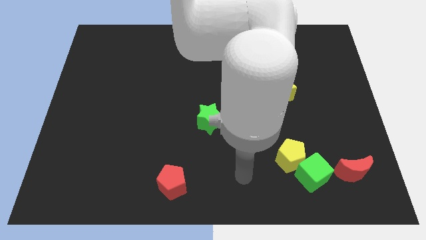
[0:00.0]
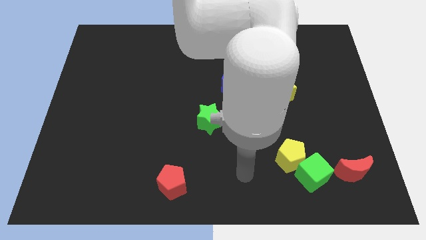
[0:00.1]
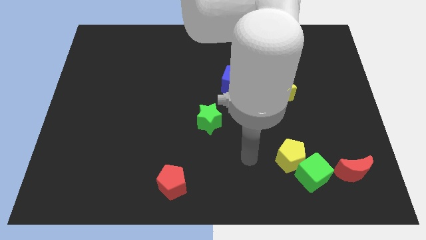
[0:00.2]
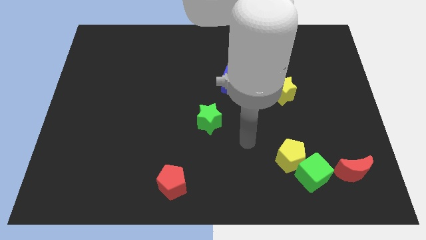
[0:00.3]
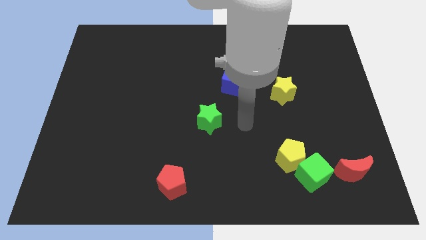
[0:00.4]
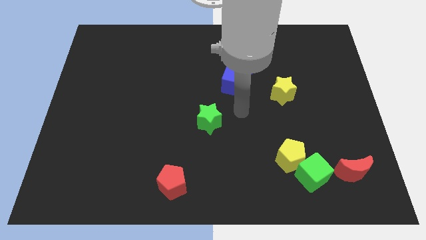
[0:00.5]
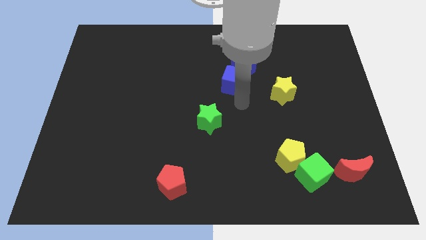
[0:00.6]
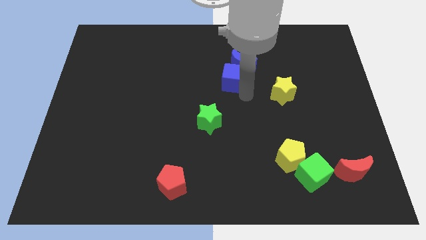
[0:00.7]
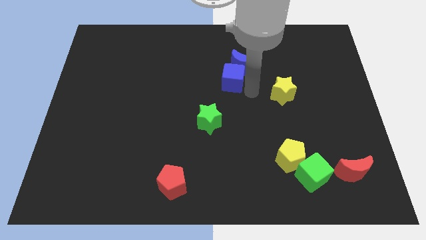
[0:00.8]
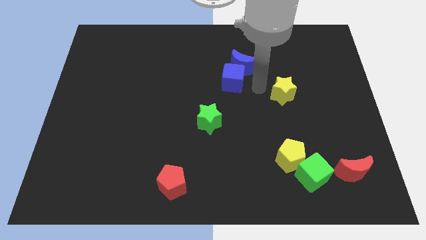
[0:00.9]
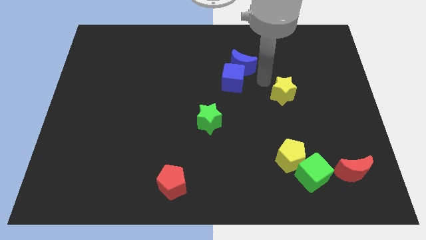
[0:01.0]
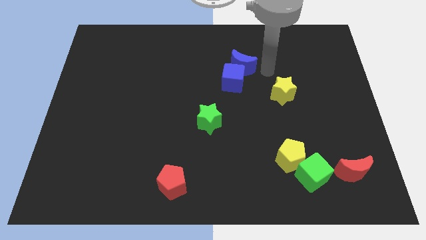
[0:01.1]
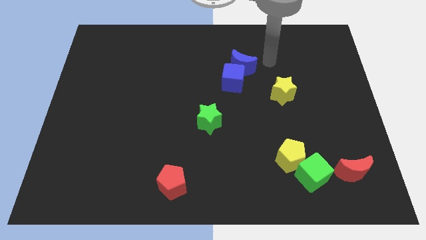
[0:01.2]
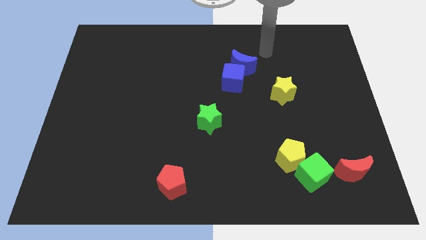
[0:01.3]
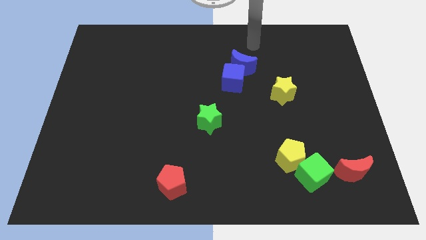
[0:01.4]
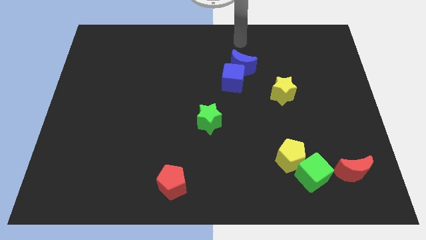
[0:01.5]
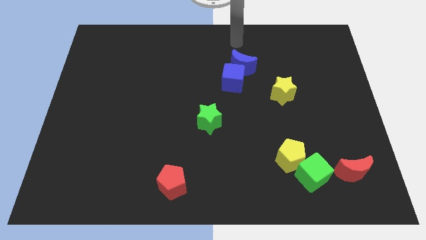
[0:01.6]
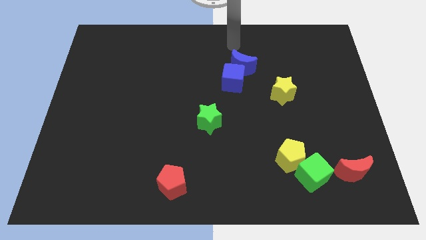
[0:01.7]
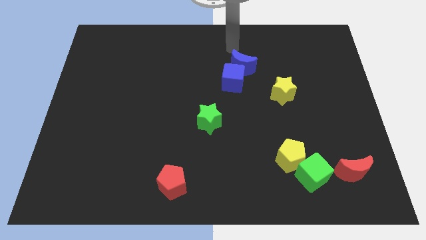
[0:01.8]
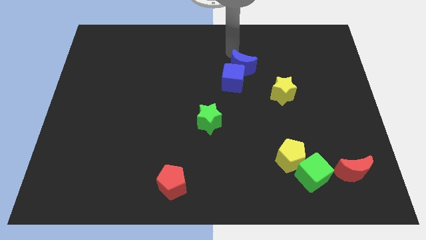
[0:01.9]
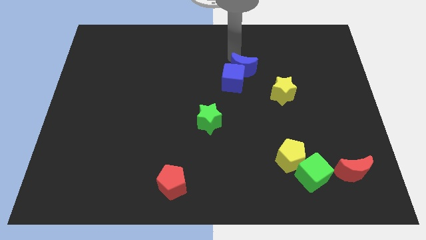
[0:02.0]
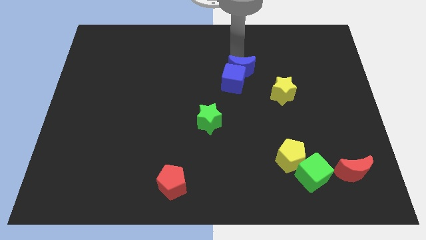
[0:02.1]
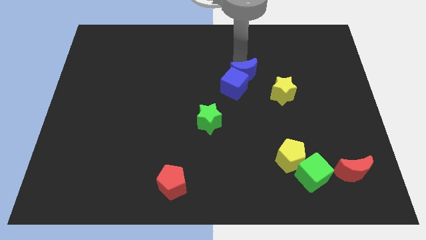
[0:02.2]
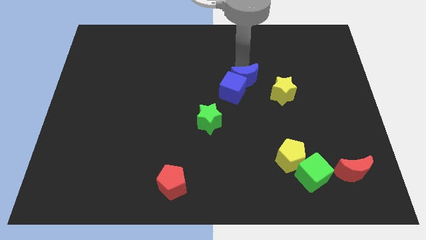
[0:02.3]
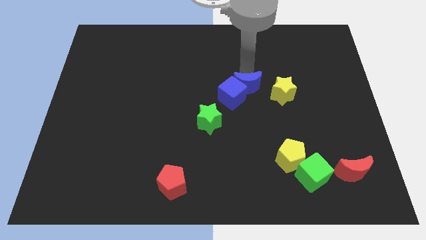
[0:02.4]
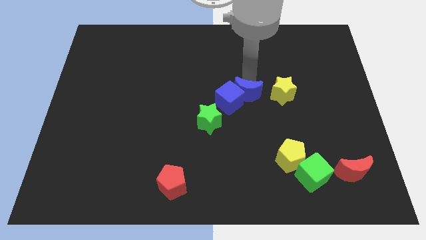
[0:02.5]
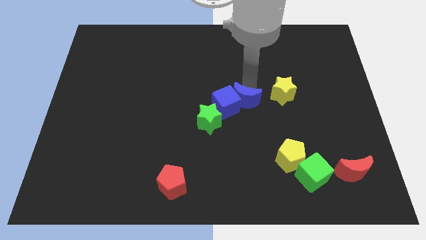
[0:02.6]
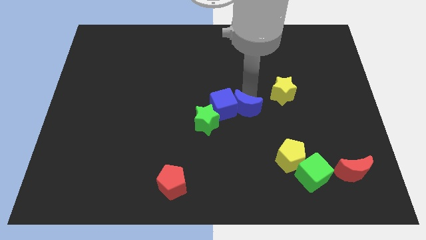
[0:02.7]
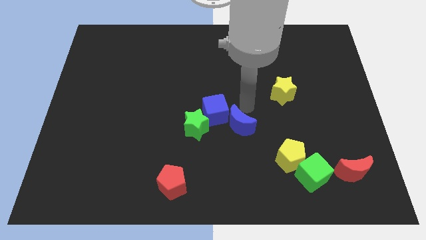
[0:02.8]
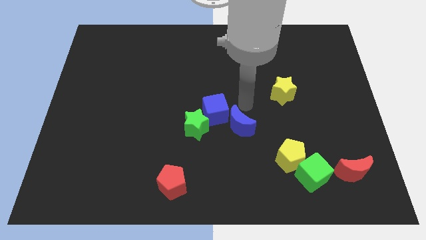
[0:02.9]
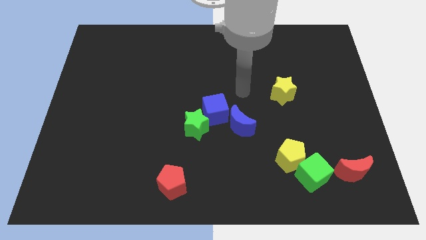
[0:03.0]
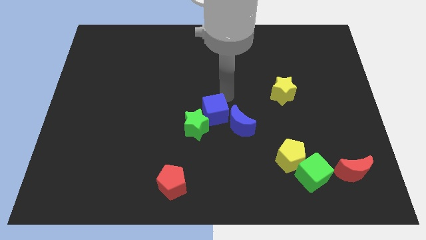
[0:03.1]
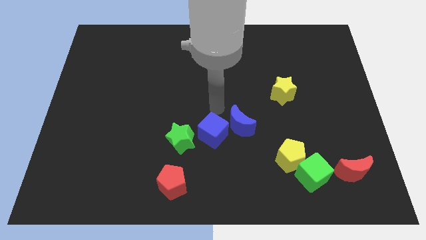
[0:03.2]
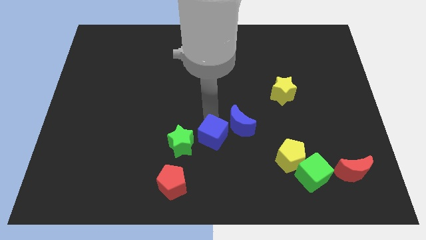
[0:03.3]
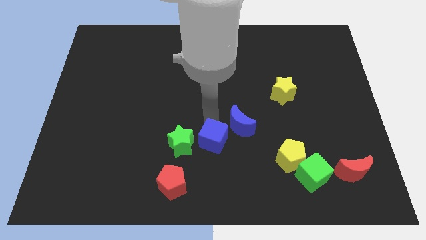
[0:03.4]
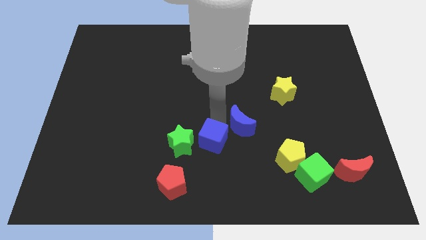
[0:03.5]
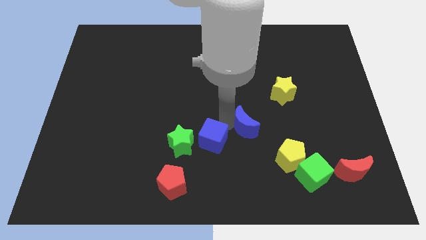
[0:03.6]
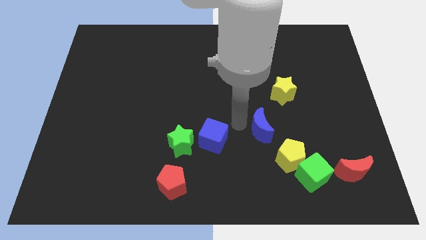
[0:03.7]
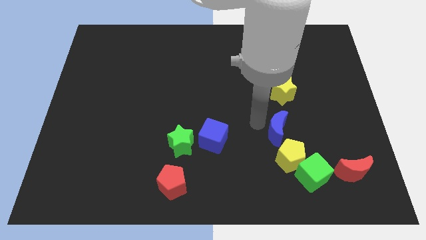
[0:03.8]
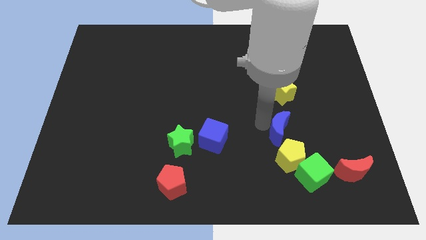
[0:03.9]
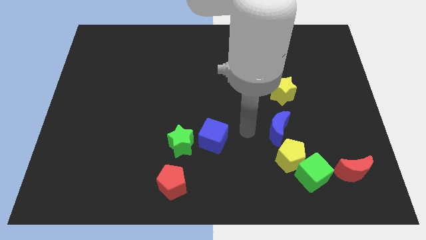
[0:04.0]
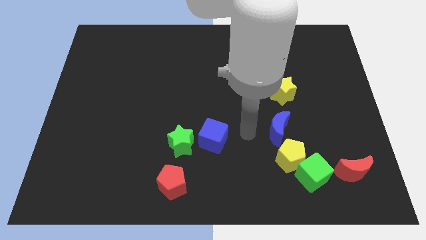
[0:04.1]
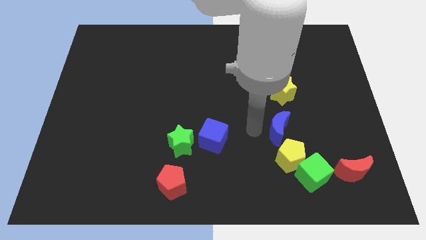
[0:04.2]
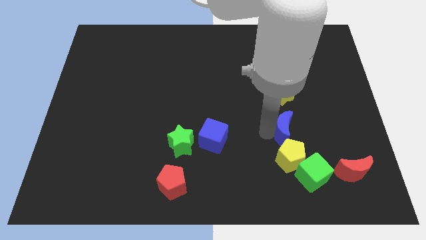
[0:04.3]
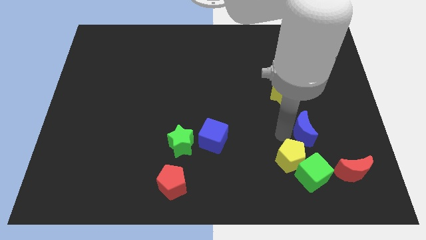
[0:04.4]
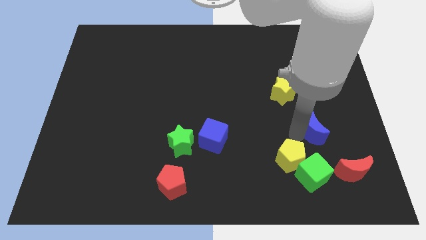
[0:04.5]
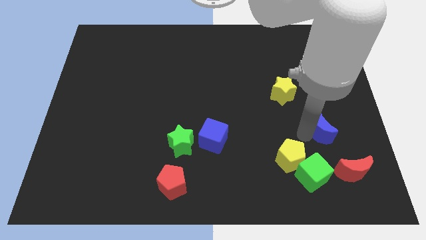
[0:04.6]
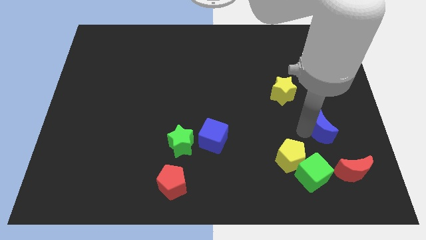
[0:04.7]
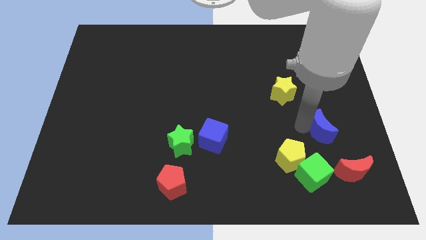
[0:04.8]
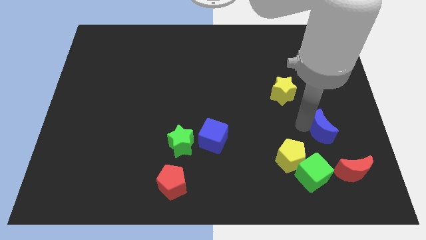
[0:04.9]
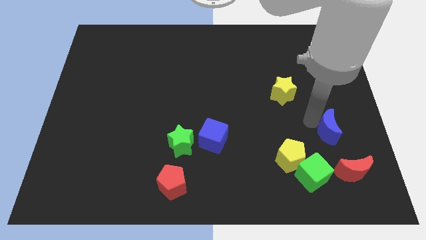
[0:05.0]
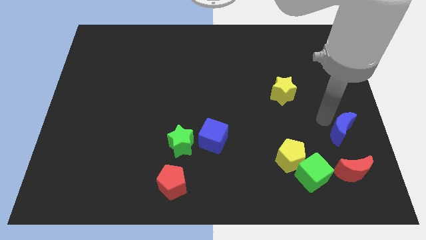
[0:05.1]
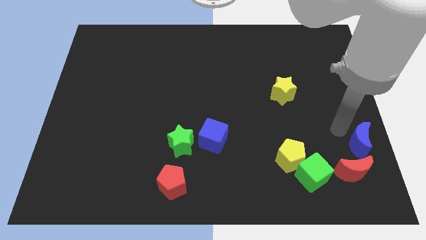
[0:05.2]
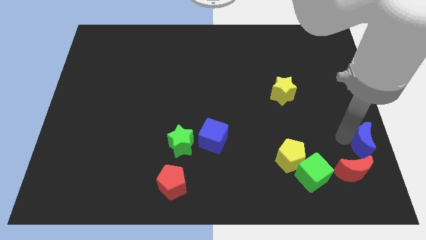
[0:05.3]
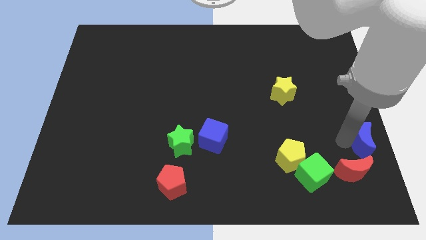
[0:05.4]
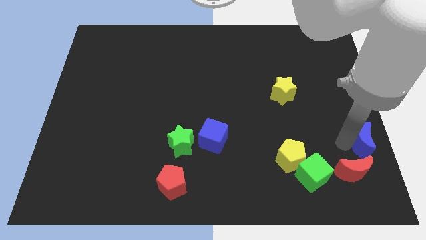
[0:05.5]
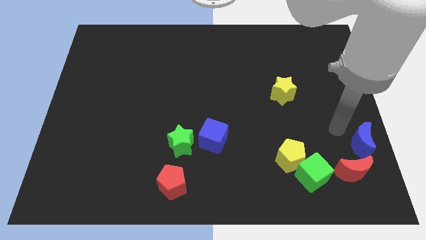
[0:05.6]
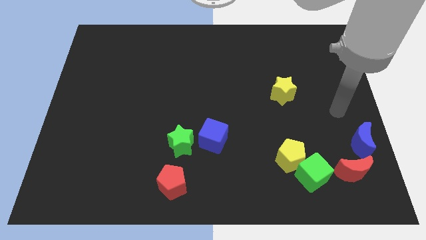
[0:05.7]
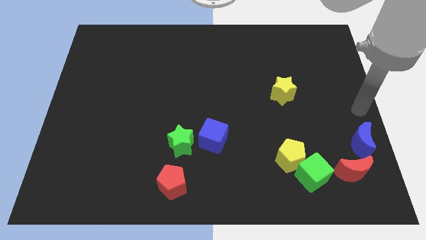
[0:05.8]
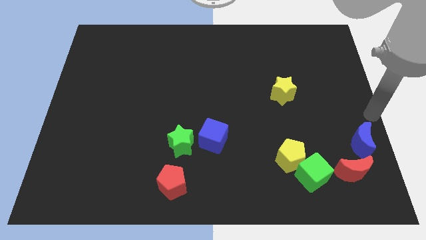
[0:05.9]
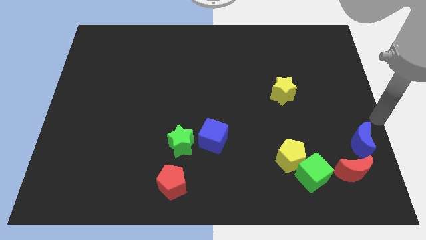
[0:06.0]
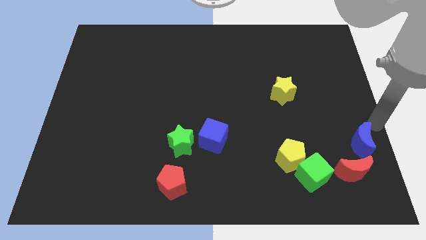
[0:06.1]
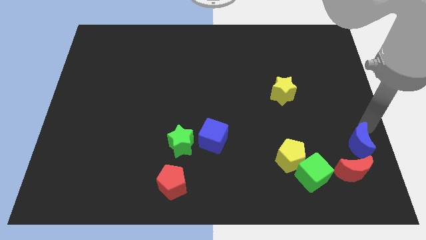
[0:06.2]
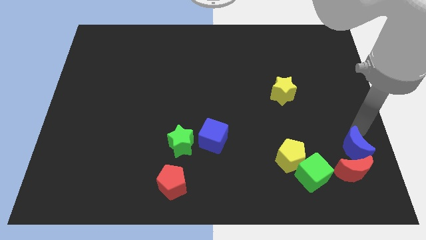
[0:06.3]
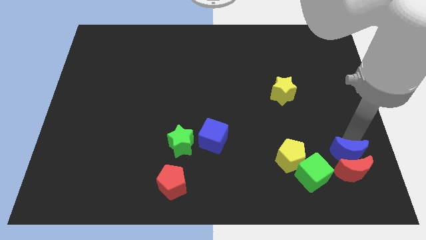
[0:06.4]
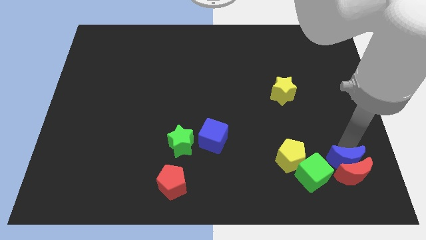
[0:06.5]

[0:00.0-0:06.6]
move the blue moon close to the red moon

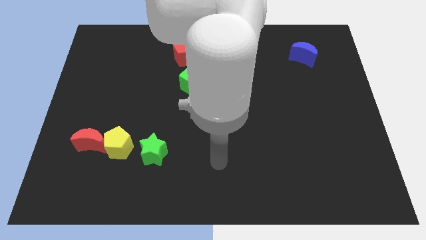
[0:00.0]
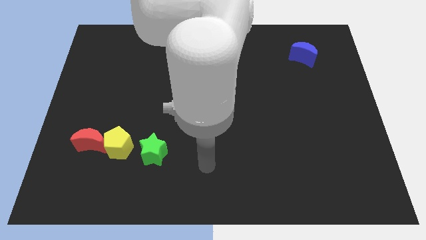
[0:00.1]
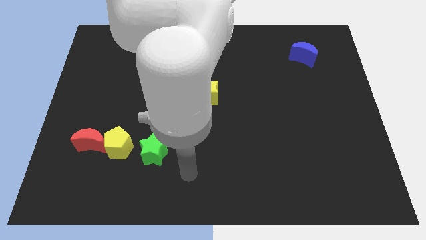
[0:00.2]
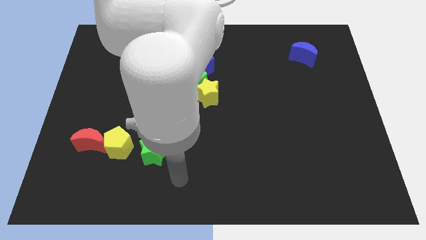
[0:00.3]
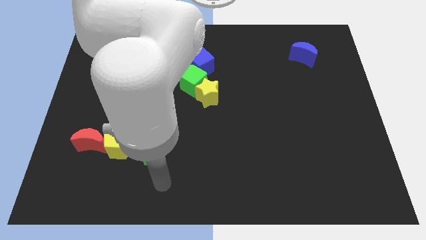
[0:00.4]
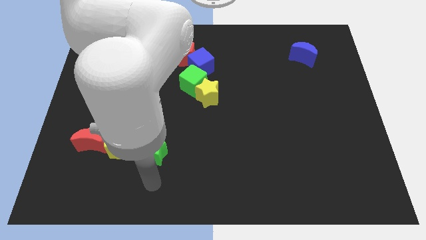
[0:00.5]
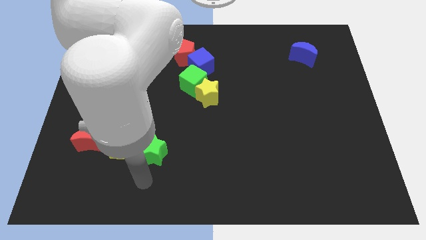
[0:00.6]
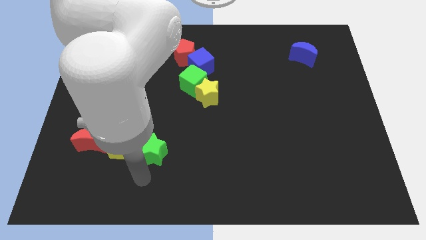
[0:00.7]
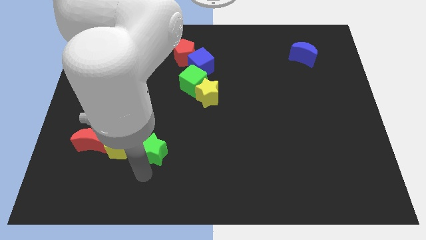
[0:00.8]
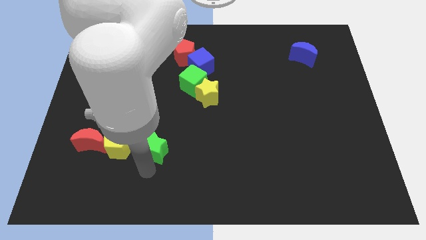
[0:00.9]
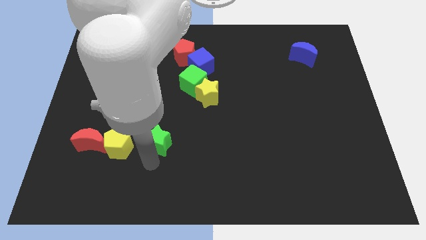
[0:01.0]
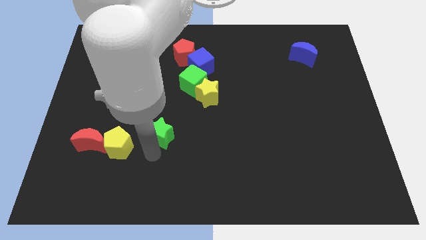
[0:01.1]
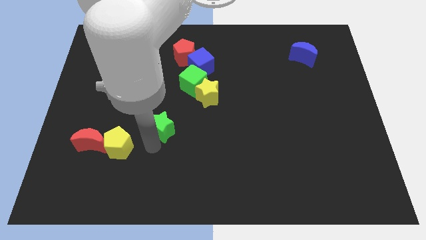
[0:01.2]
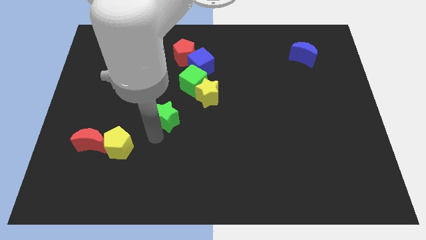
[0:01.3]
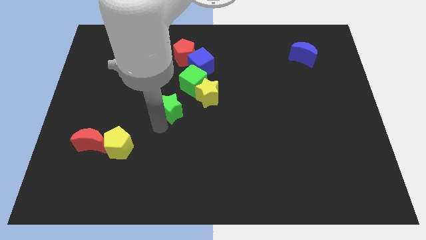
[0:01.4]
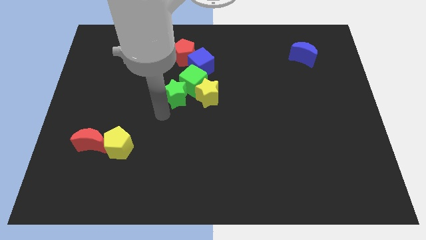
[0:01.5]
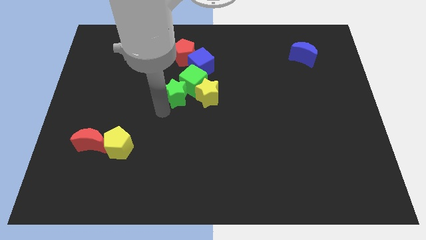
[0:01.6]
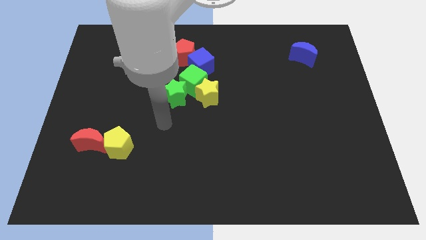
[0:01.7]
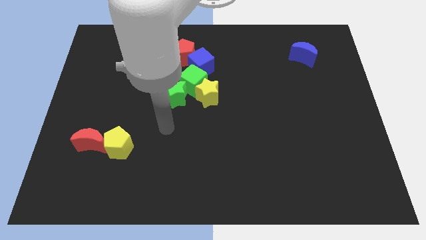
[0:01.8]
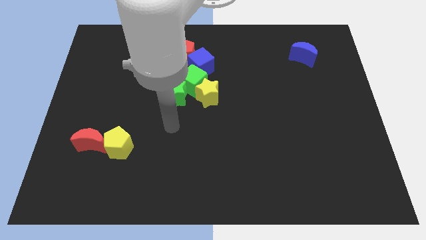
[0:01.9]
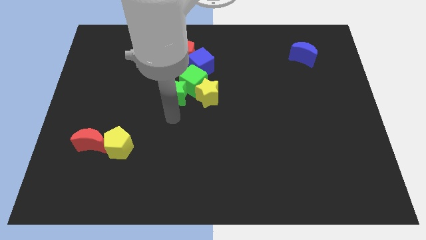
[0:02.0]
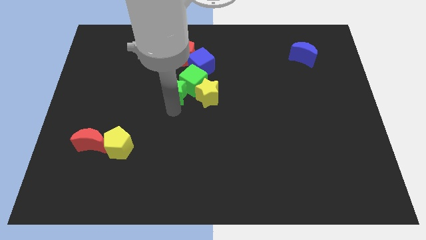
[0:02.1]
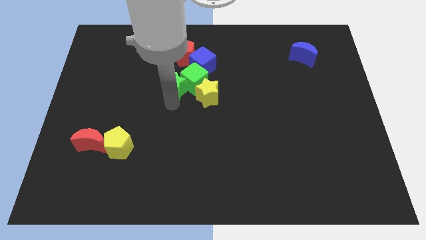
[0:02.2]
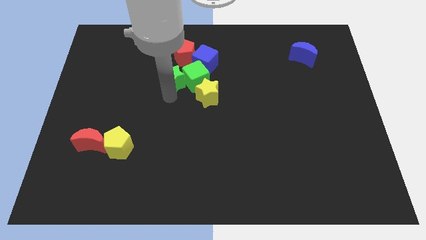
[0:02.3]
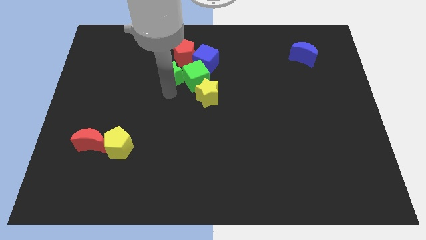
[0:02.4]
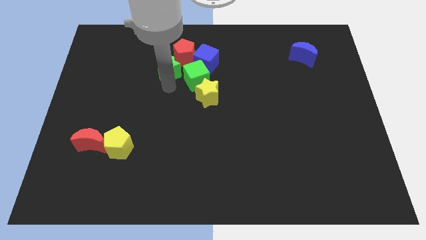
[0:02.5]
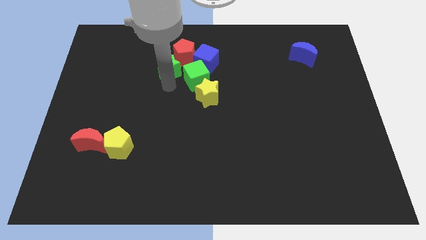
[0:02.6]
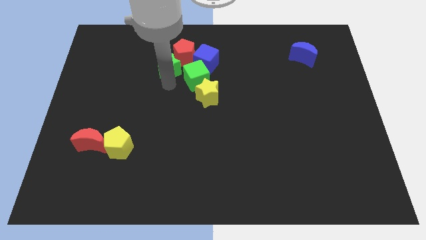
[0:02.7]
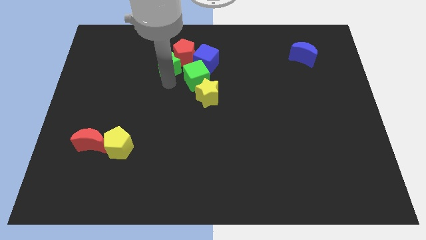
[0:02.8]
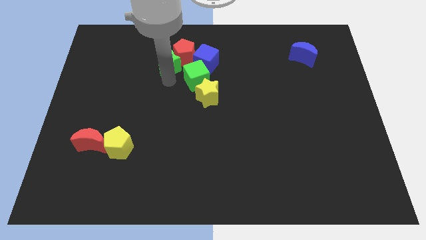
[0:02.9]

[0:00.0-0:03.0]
put the green star close to the red pentagon
